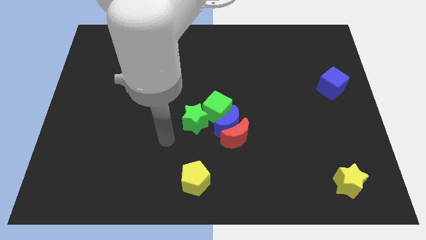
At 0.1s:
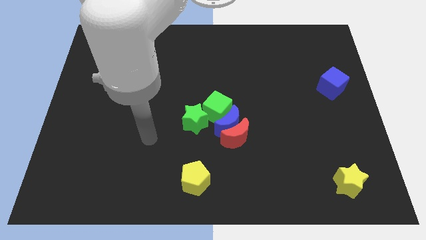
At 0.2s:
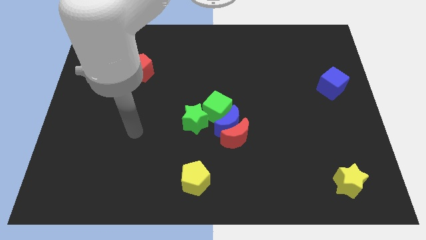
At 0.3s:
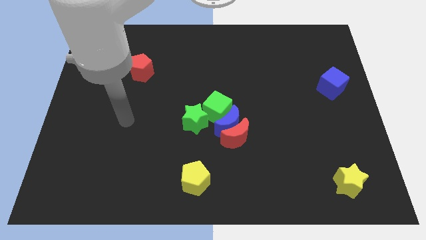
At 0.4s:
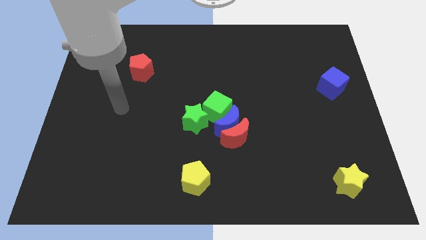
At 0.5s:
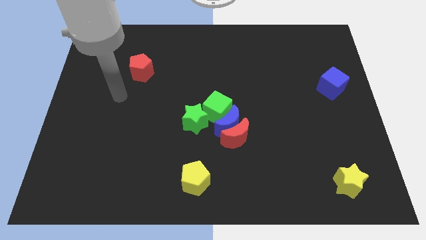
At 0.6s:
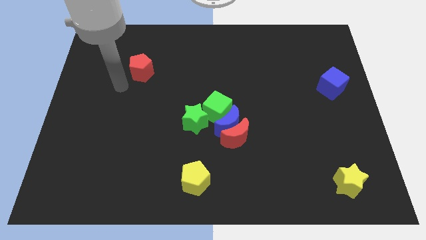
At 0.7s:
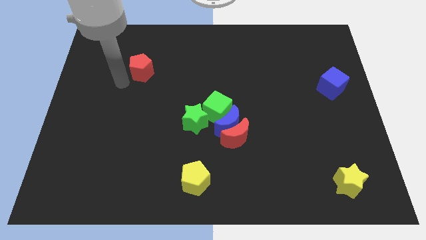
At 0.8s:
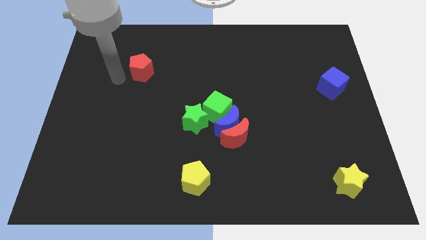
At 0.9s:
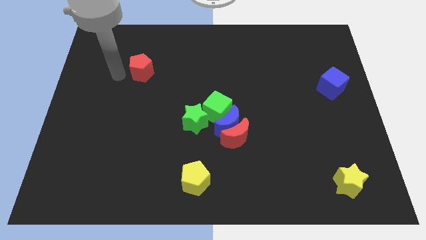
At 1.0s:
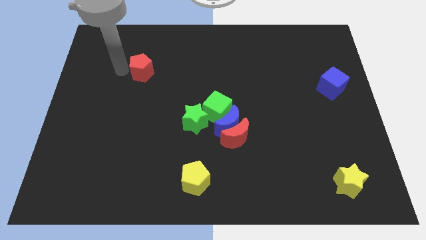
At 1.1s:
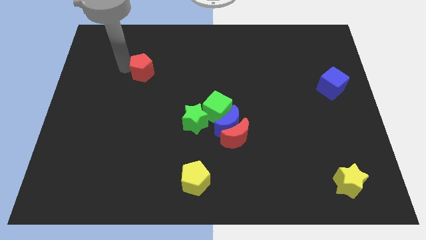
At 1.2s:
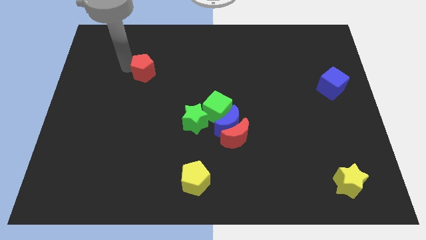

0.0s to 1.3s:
tap the red pentagon

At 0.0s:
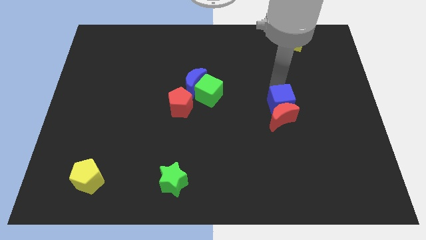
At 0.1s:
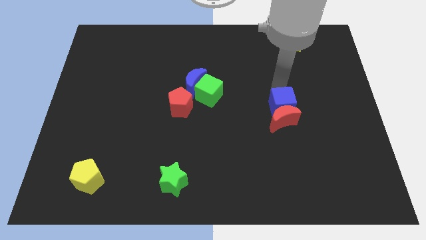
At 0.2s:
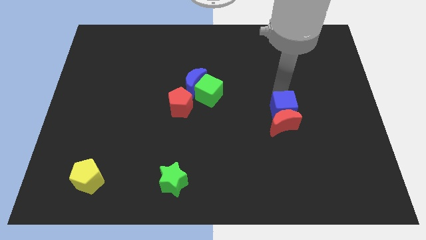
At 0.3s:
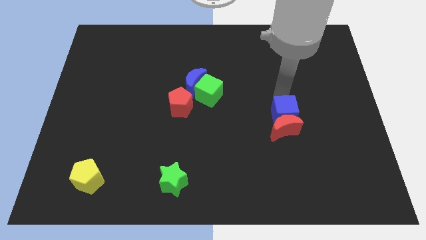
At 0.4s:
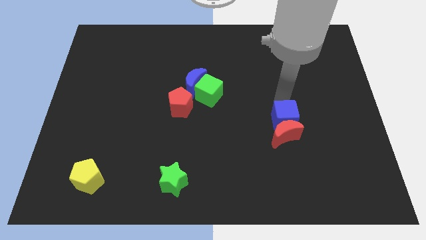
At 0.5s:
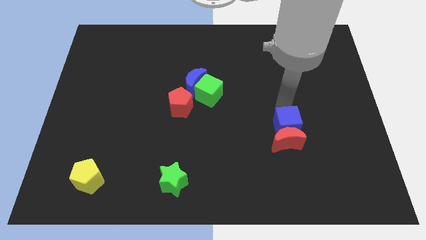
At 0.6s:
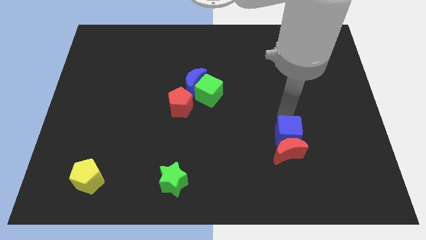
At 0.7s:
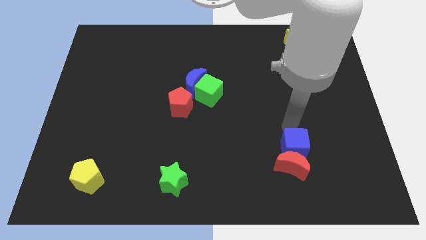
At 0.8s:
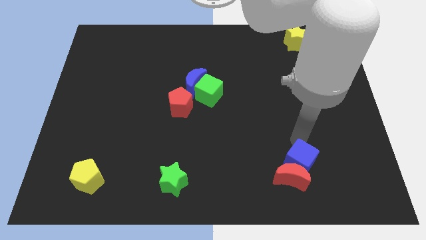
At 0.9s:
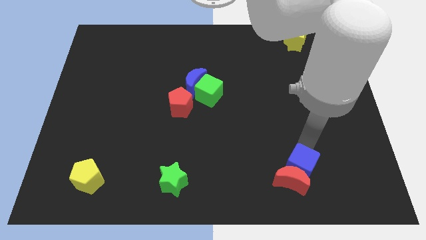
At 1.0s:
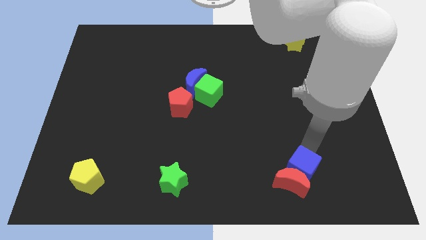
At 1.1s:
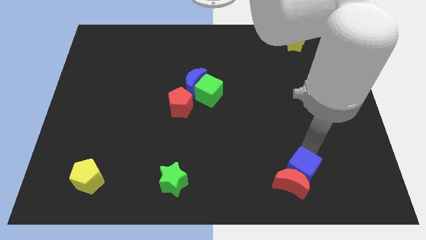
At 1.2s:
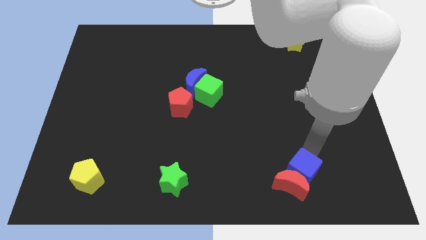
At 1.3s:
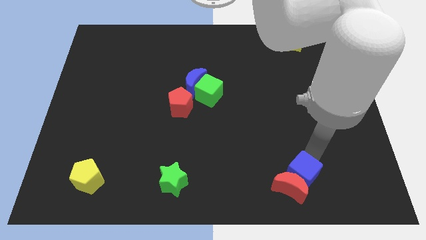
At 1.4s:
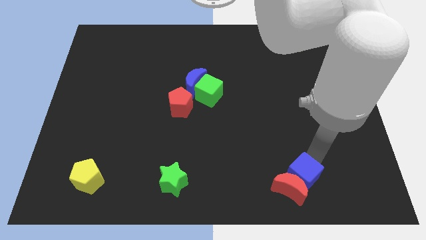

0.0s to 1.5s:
drag the blue cube slightly downwards

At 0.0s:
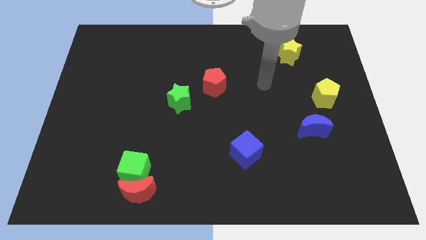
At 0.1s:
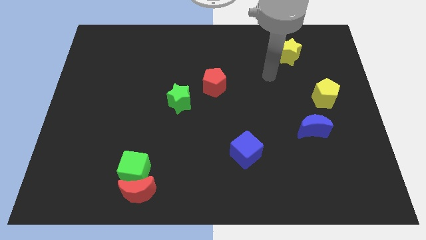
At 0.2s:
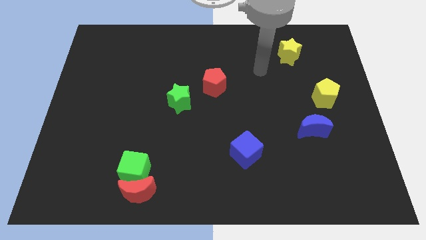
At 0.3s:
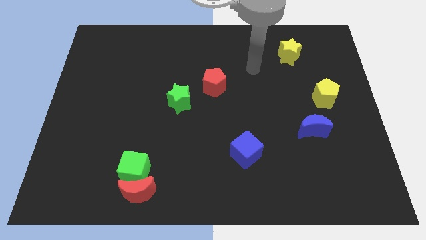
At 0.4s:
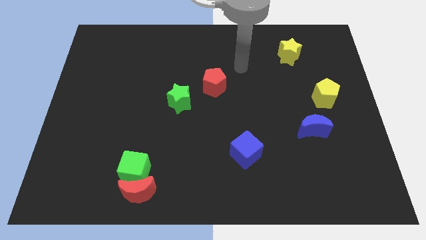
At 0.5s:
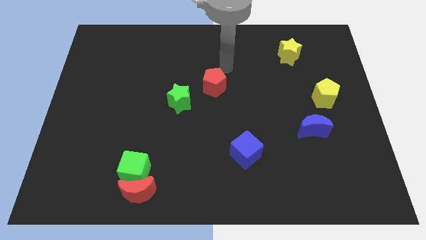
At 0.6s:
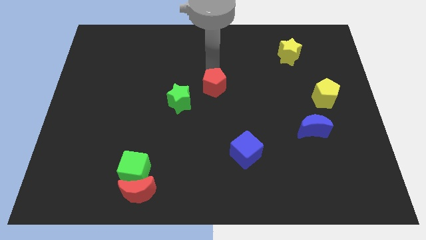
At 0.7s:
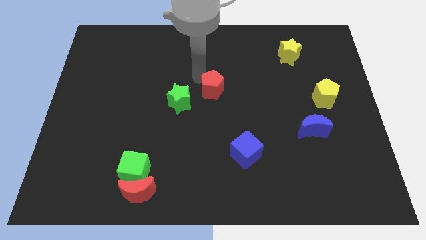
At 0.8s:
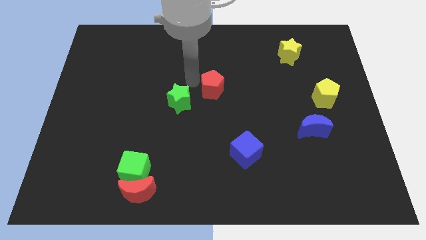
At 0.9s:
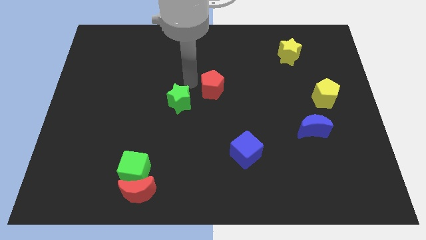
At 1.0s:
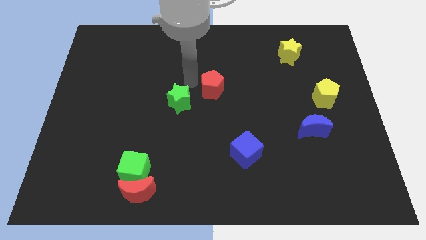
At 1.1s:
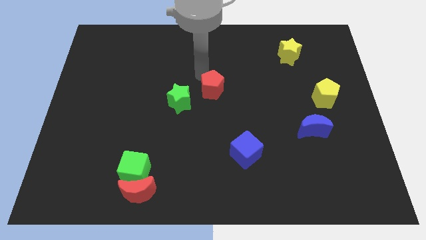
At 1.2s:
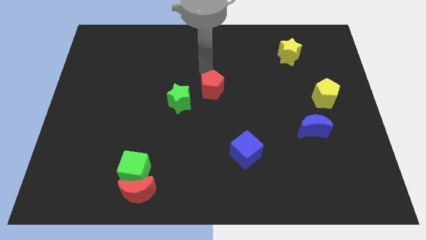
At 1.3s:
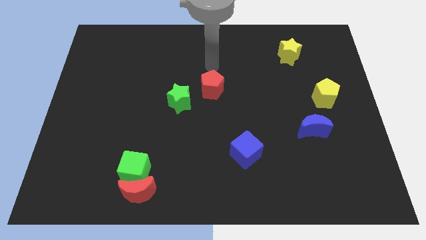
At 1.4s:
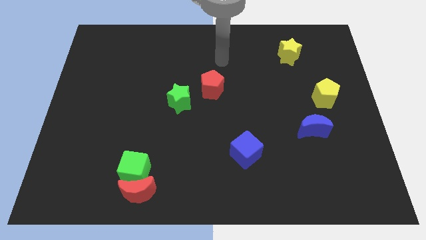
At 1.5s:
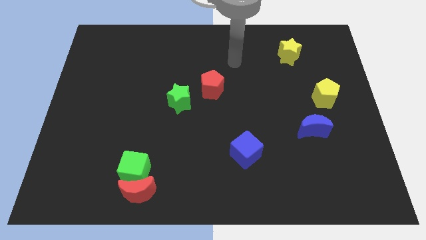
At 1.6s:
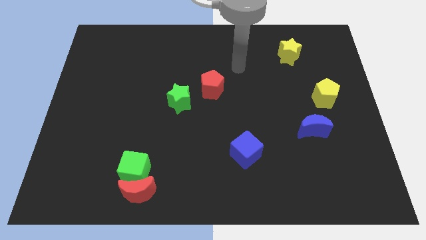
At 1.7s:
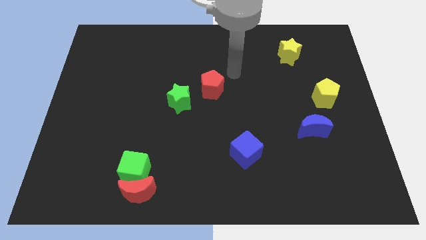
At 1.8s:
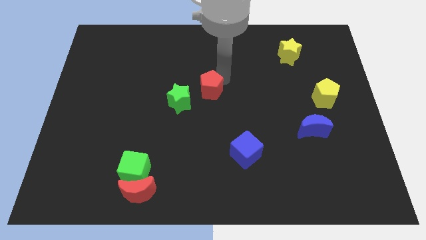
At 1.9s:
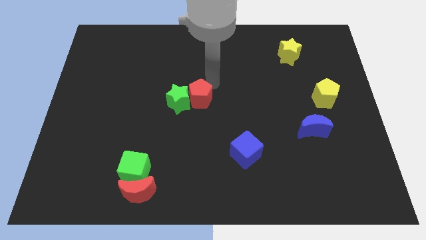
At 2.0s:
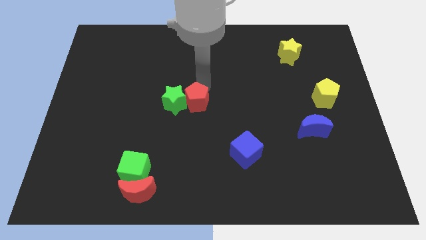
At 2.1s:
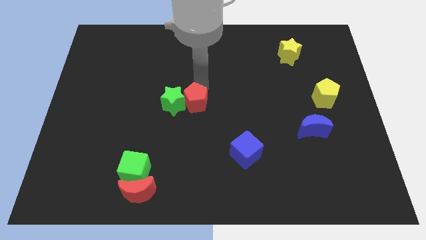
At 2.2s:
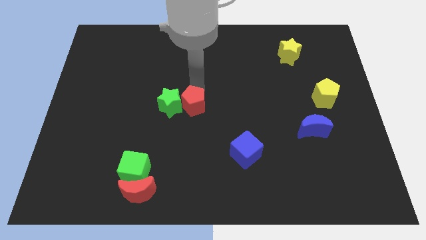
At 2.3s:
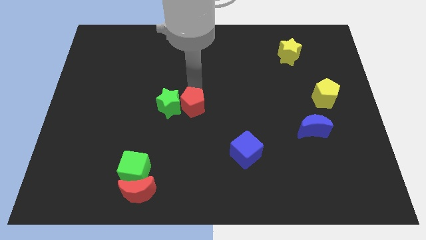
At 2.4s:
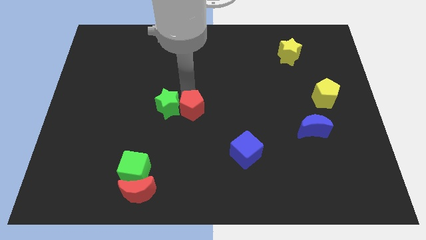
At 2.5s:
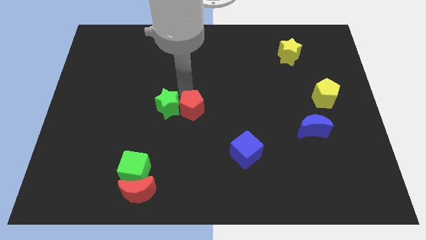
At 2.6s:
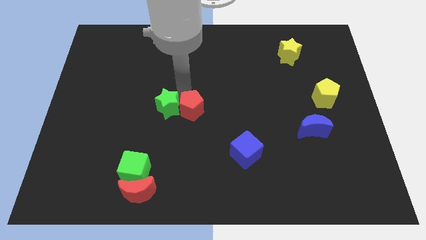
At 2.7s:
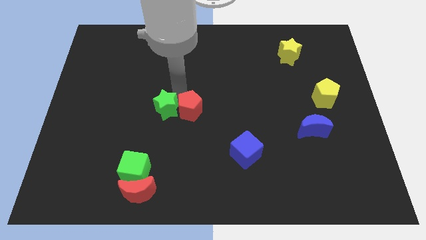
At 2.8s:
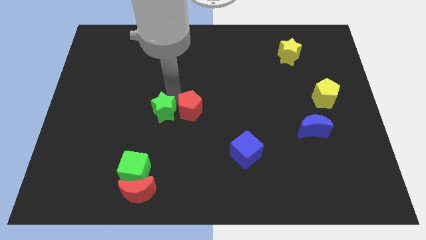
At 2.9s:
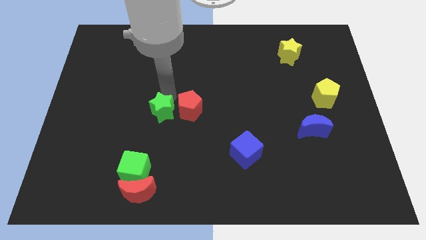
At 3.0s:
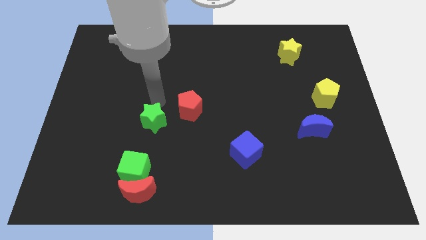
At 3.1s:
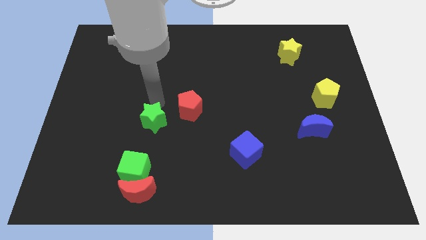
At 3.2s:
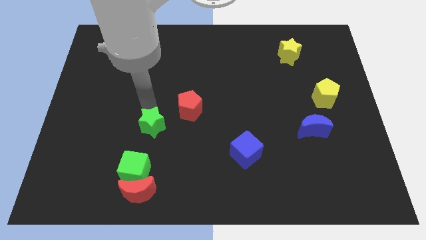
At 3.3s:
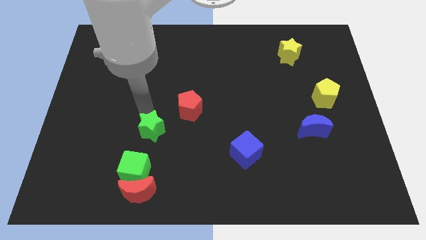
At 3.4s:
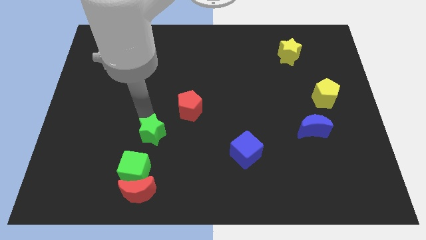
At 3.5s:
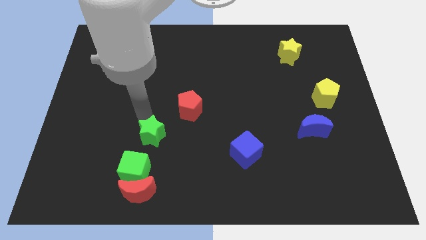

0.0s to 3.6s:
push green star above green cube

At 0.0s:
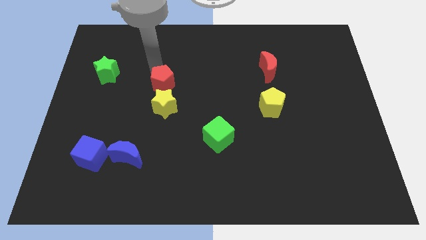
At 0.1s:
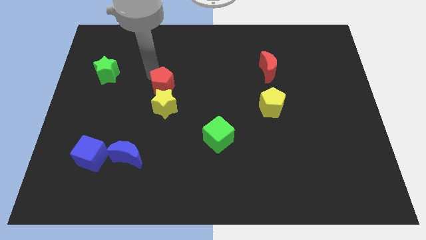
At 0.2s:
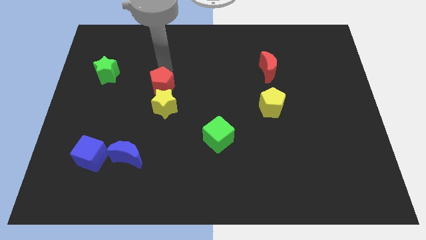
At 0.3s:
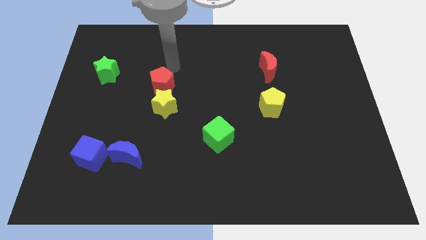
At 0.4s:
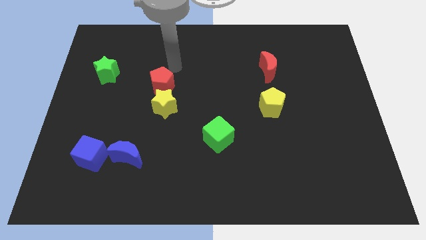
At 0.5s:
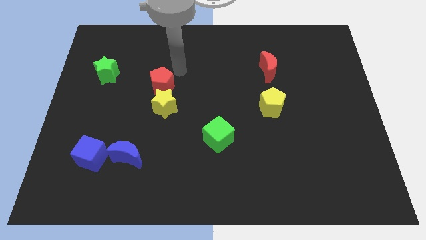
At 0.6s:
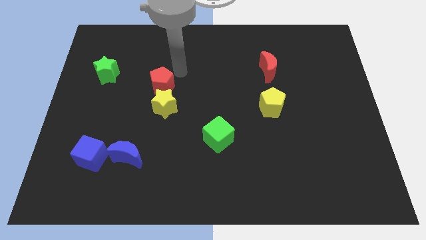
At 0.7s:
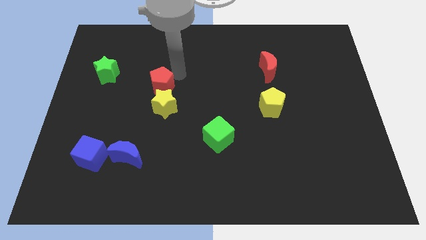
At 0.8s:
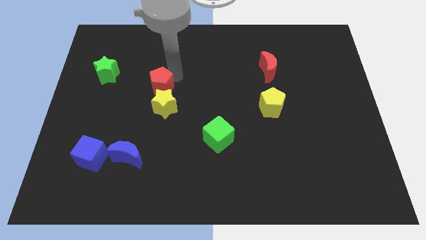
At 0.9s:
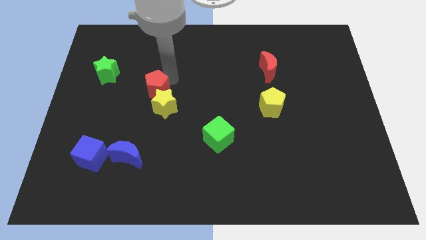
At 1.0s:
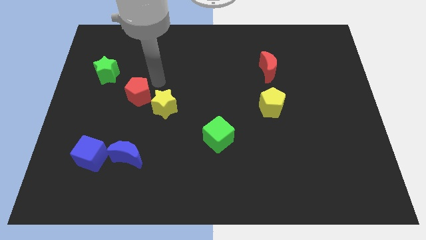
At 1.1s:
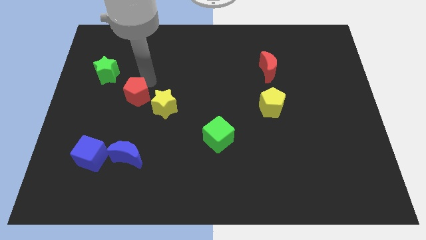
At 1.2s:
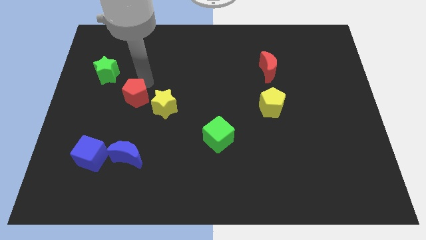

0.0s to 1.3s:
push the red pentagon in between the green star and yellow star

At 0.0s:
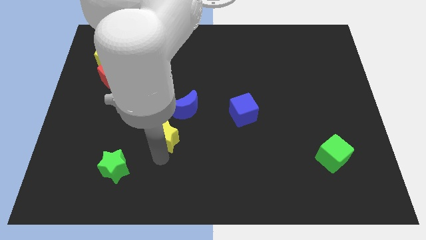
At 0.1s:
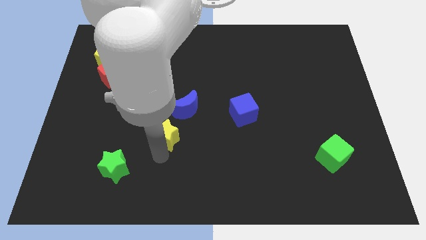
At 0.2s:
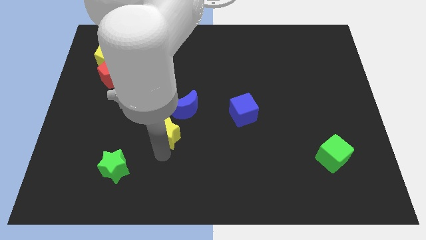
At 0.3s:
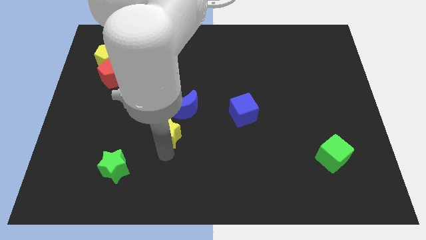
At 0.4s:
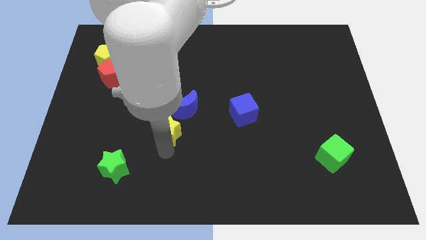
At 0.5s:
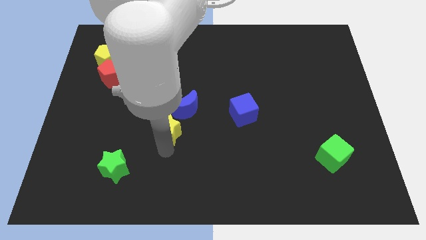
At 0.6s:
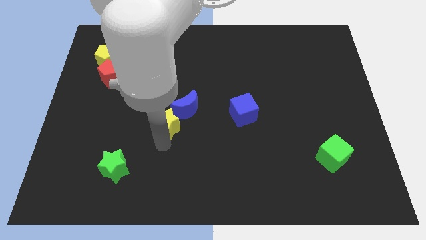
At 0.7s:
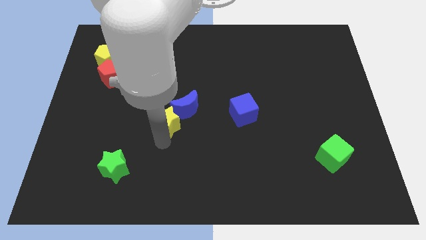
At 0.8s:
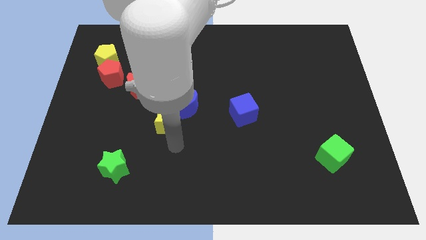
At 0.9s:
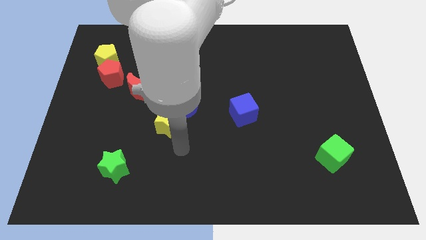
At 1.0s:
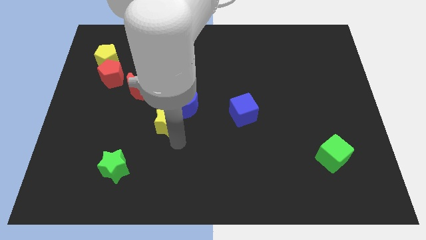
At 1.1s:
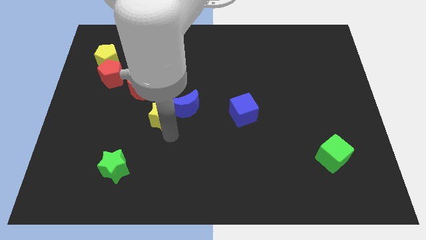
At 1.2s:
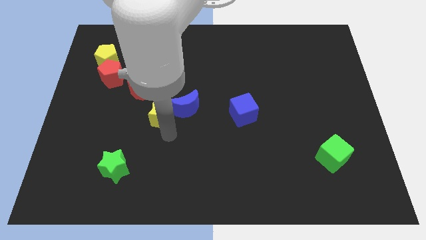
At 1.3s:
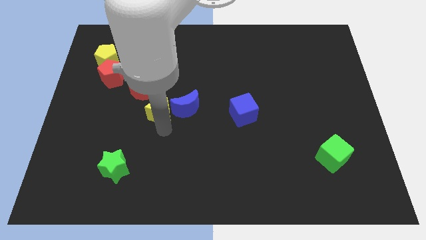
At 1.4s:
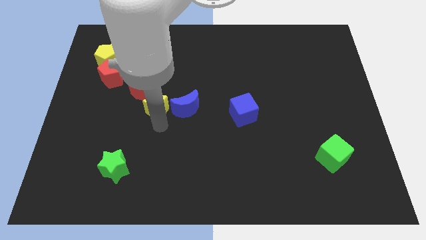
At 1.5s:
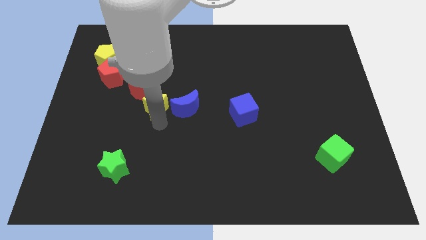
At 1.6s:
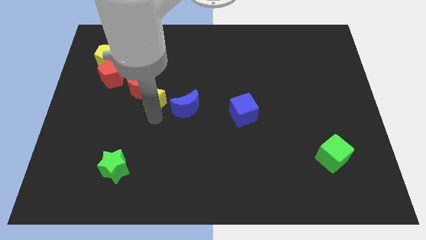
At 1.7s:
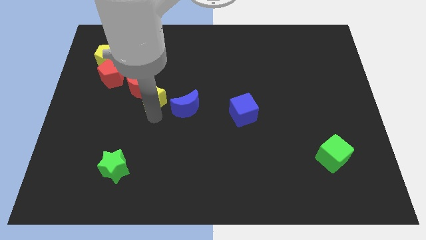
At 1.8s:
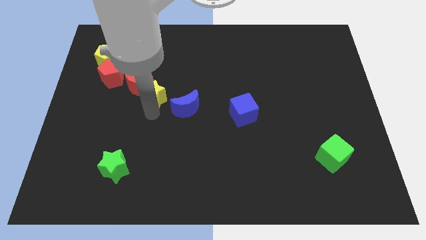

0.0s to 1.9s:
move the yellow star close to the red crescent
